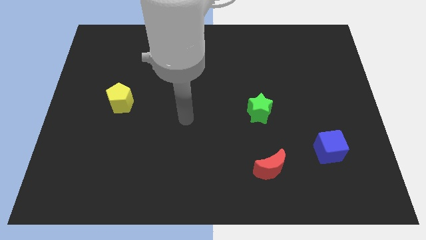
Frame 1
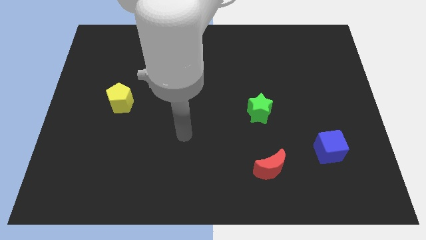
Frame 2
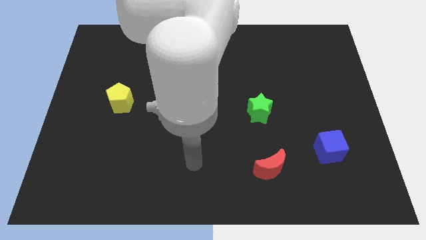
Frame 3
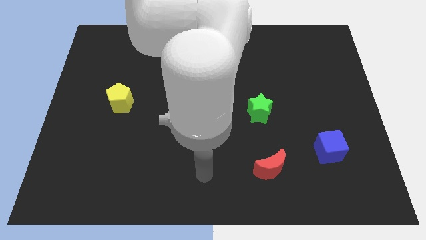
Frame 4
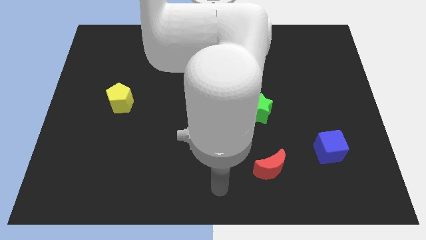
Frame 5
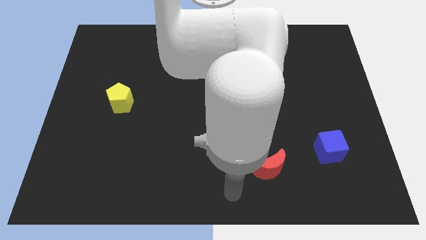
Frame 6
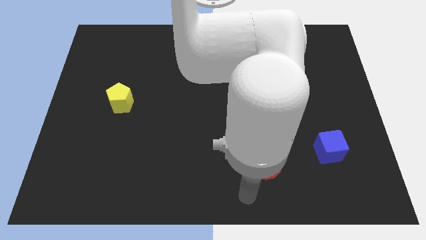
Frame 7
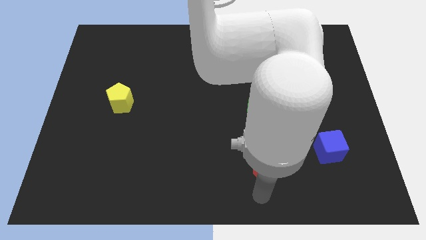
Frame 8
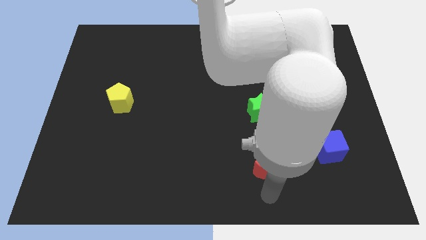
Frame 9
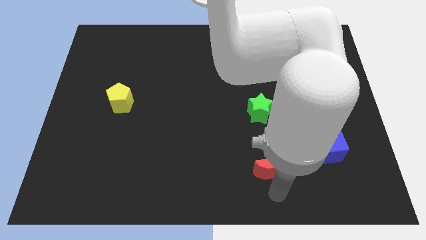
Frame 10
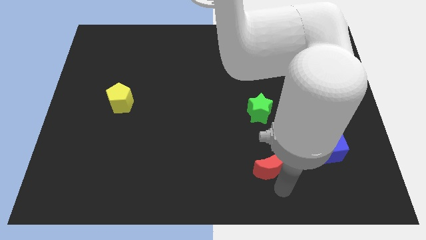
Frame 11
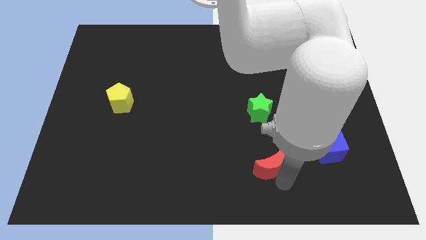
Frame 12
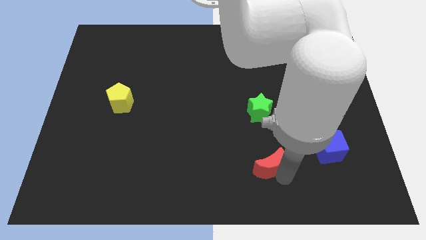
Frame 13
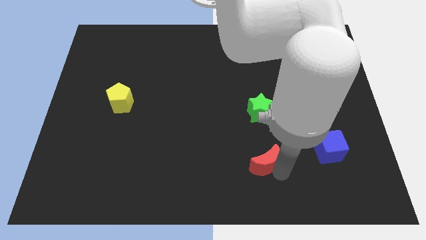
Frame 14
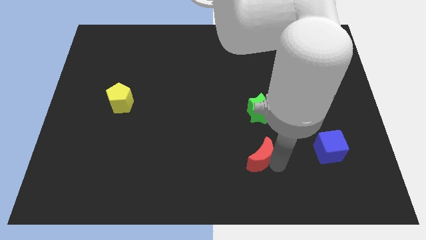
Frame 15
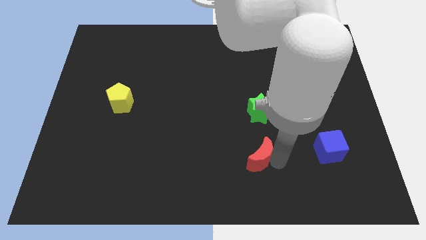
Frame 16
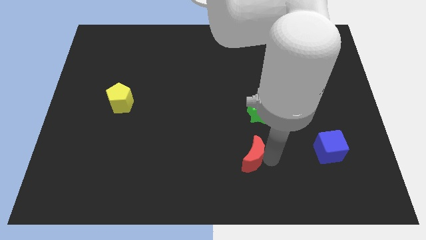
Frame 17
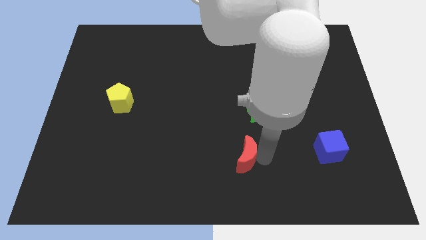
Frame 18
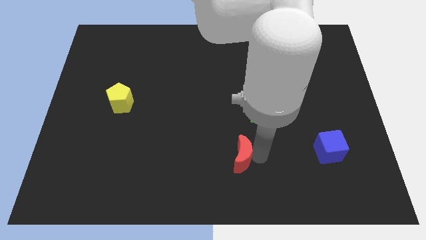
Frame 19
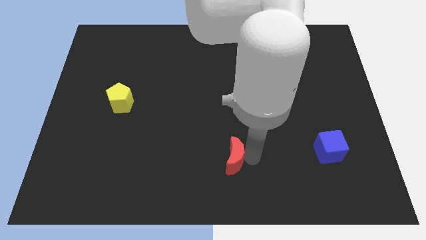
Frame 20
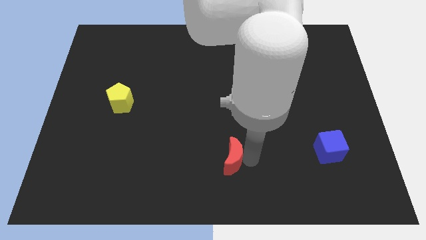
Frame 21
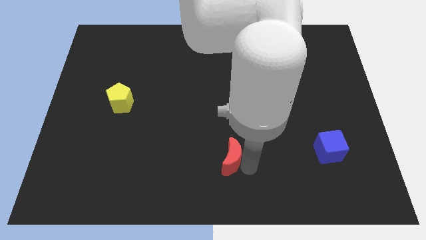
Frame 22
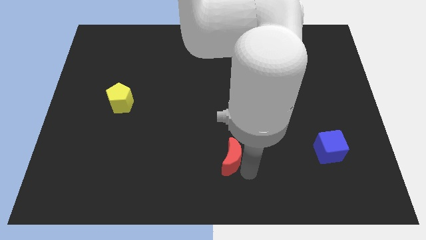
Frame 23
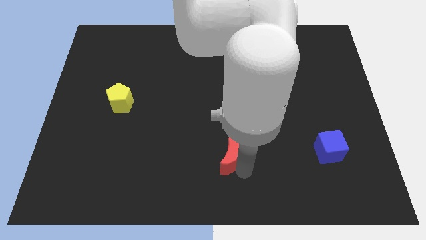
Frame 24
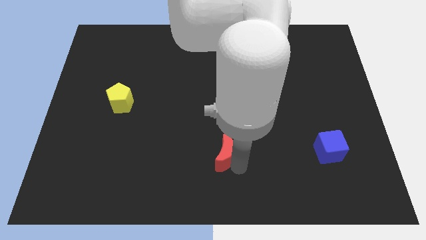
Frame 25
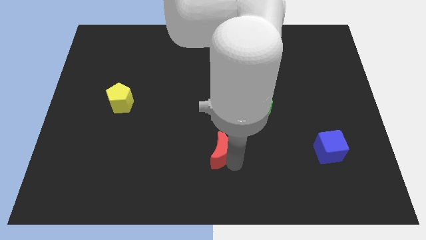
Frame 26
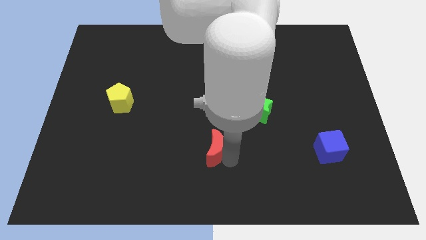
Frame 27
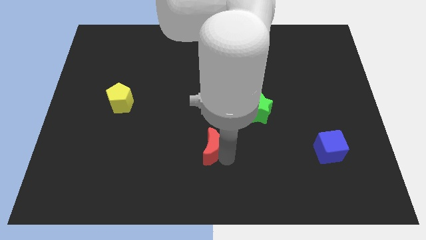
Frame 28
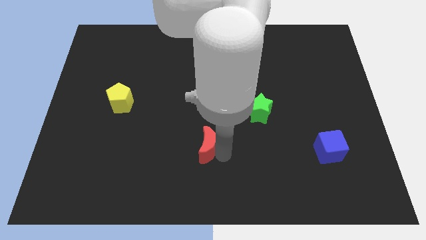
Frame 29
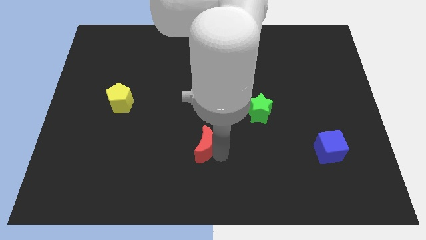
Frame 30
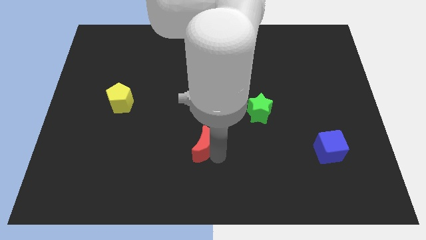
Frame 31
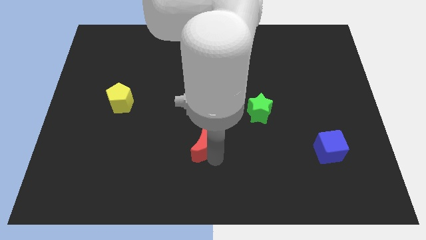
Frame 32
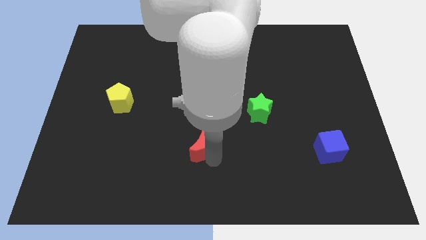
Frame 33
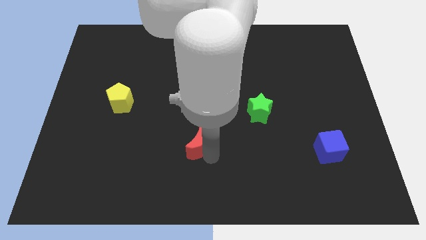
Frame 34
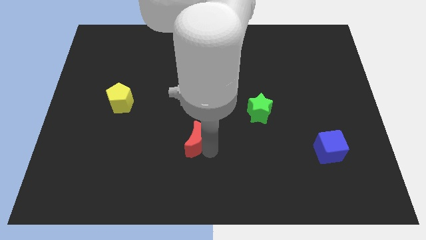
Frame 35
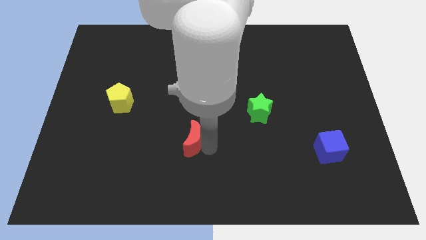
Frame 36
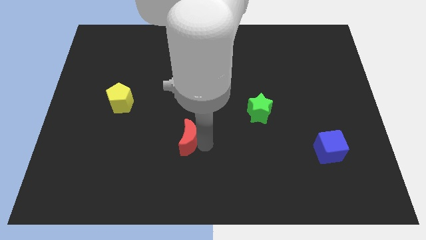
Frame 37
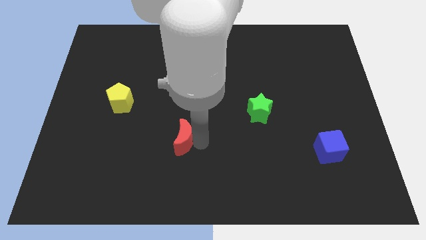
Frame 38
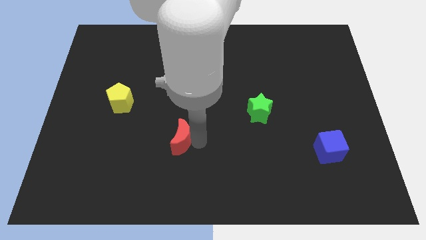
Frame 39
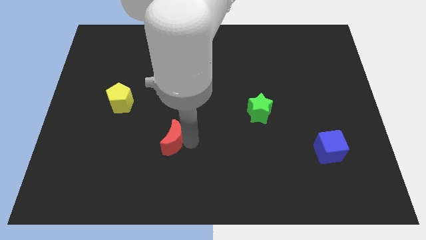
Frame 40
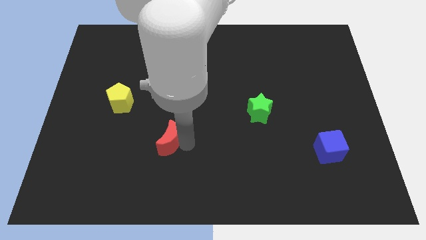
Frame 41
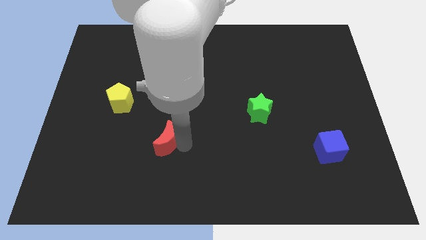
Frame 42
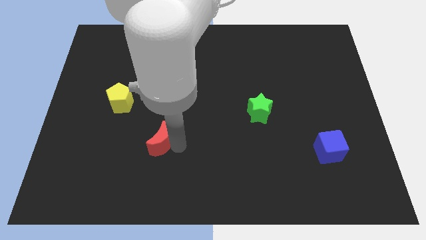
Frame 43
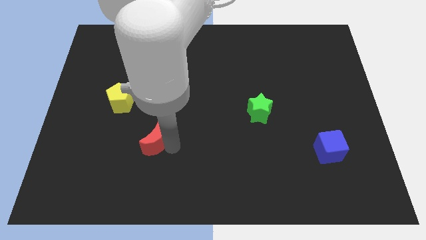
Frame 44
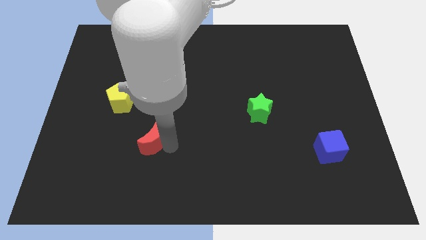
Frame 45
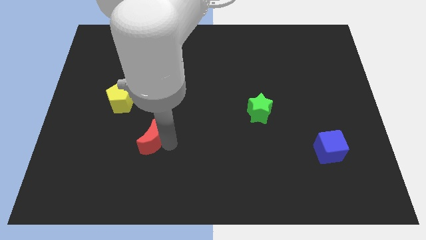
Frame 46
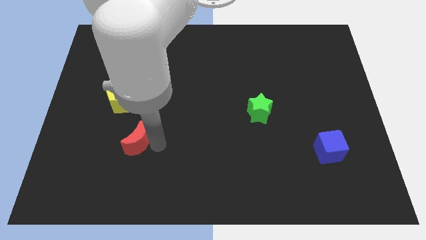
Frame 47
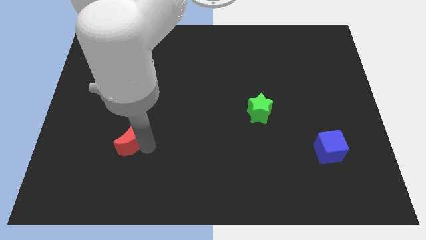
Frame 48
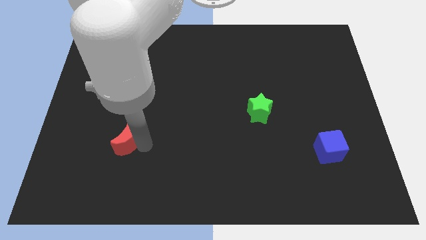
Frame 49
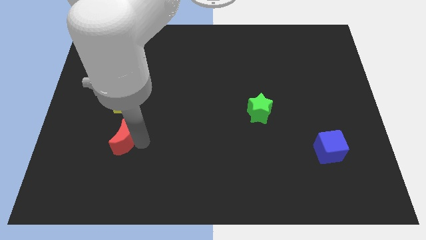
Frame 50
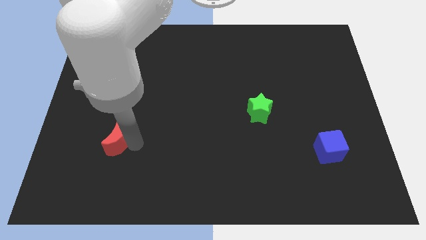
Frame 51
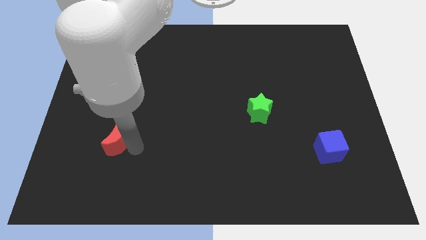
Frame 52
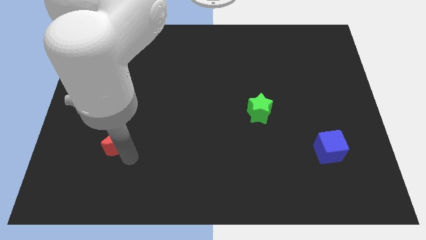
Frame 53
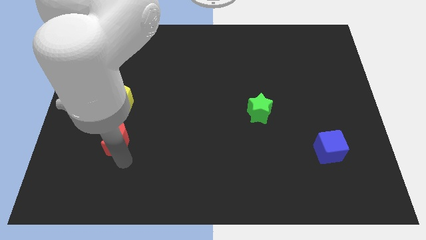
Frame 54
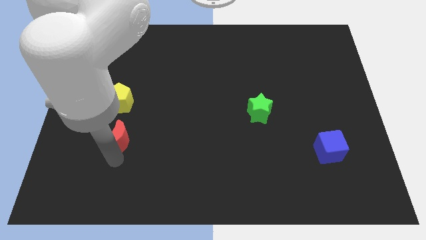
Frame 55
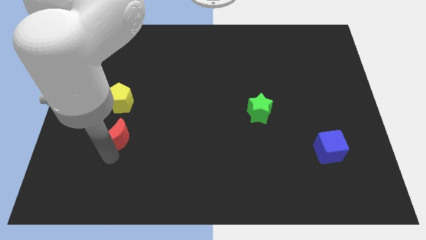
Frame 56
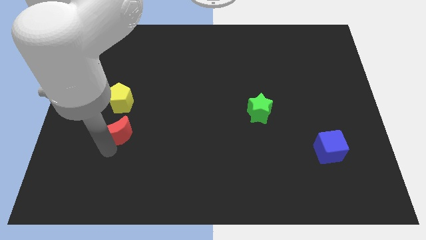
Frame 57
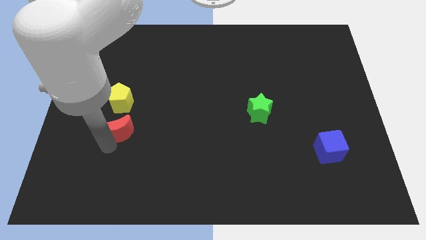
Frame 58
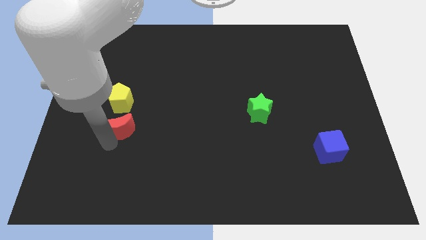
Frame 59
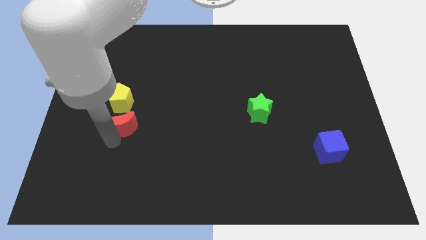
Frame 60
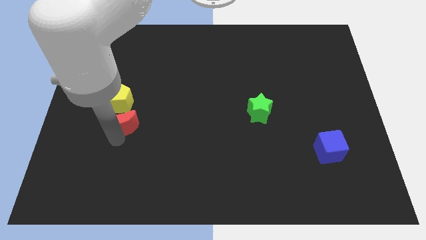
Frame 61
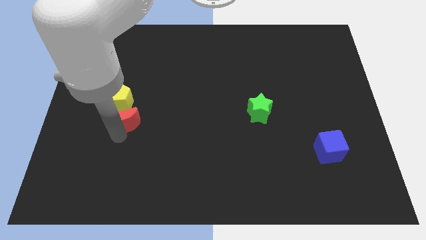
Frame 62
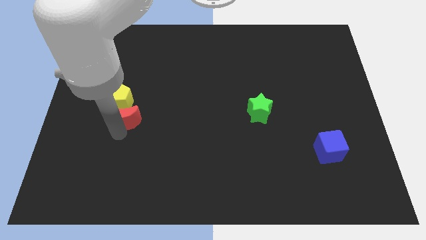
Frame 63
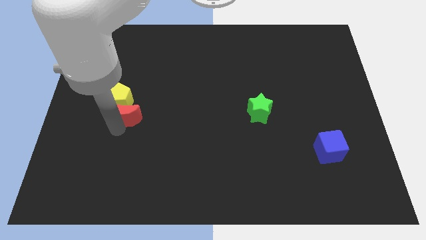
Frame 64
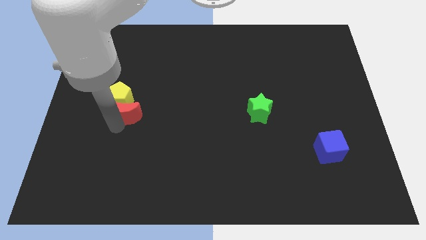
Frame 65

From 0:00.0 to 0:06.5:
move the red block next to the pentagon

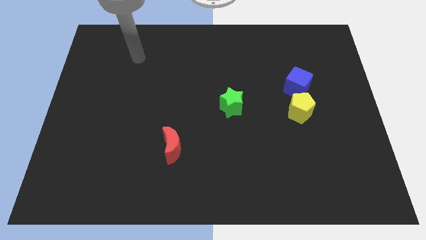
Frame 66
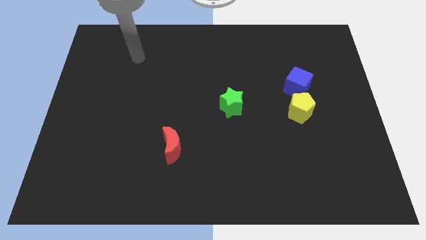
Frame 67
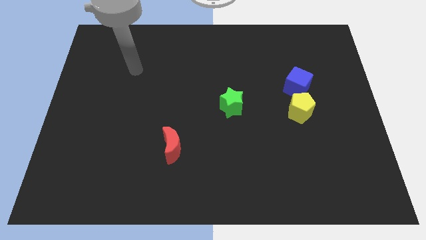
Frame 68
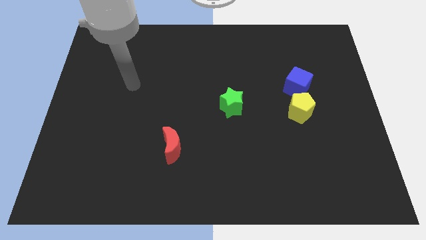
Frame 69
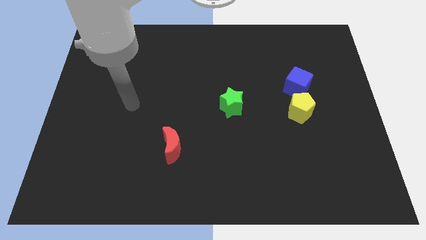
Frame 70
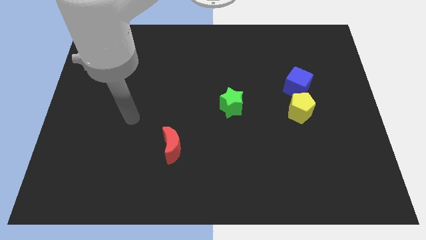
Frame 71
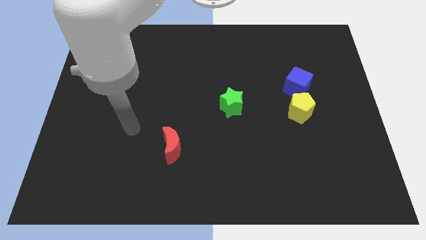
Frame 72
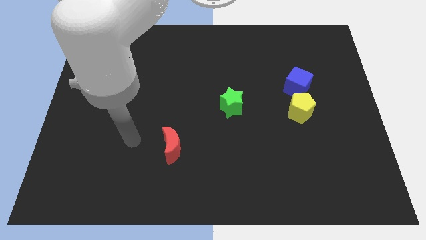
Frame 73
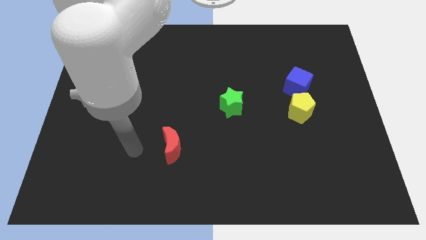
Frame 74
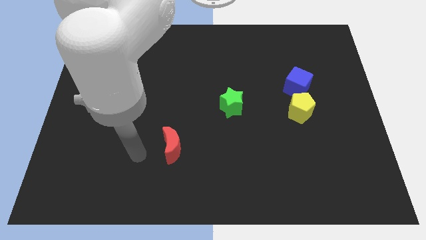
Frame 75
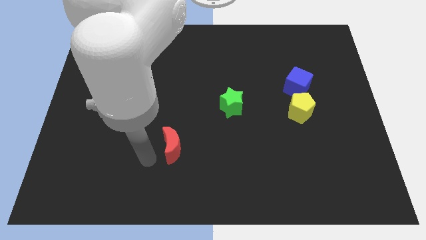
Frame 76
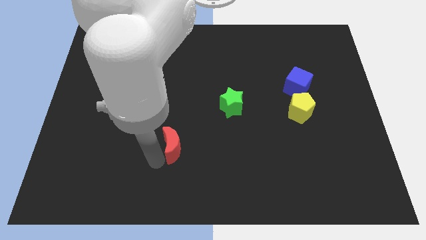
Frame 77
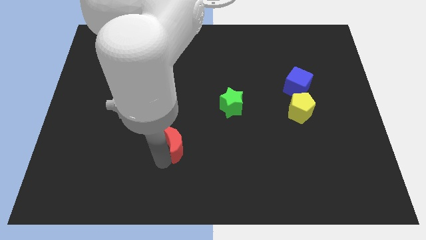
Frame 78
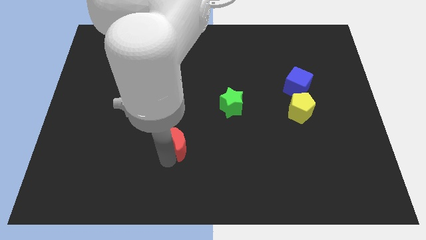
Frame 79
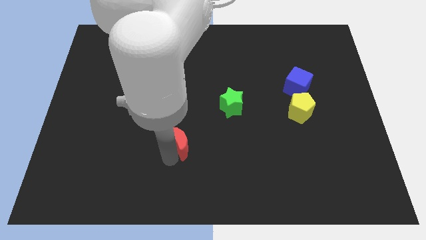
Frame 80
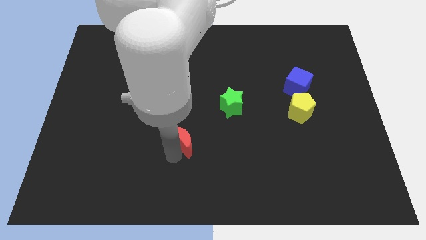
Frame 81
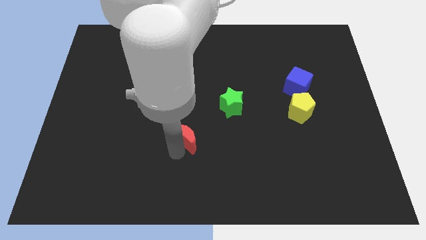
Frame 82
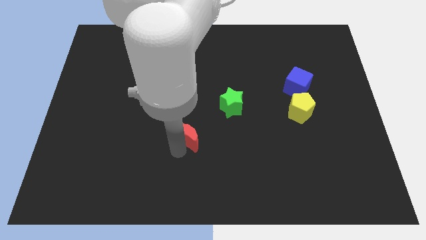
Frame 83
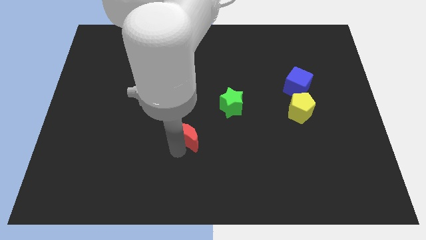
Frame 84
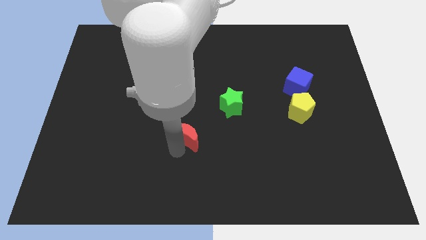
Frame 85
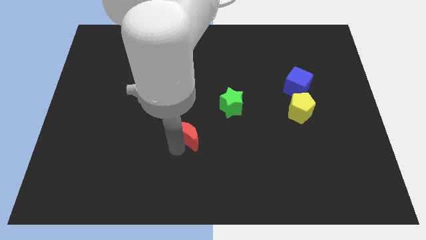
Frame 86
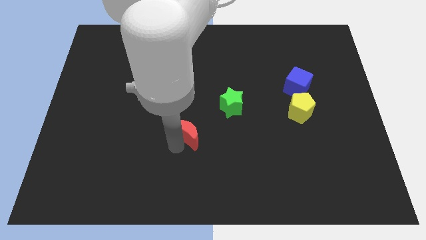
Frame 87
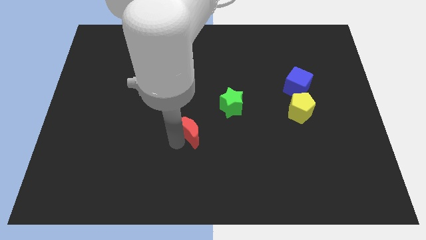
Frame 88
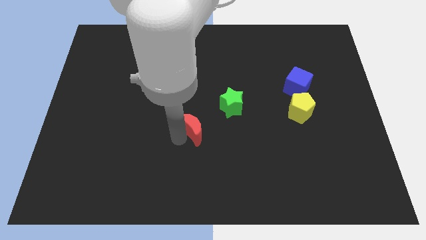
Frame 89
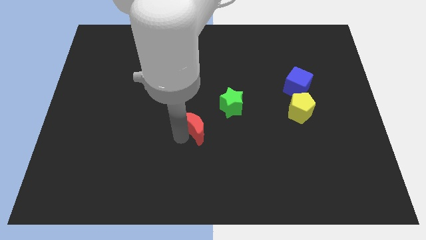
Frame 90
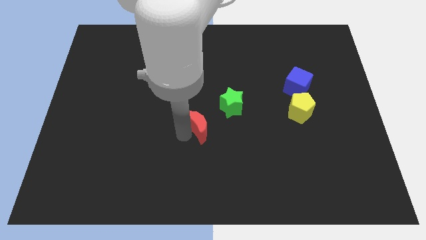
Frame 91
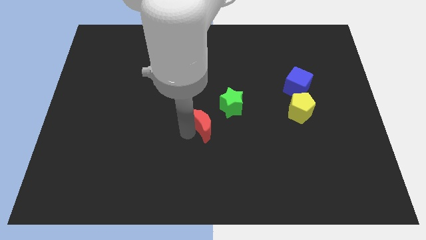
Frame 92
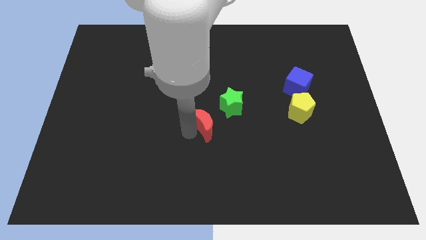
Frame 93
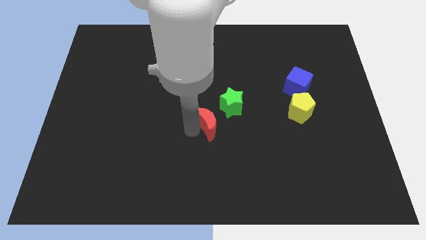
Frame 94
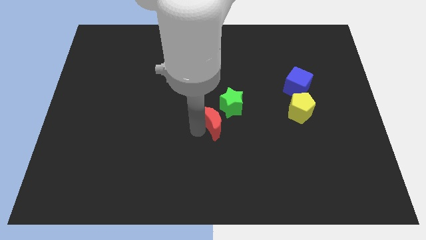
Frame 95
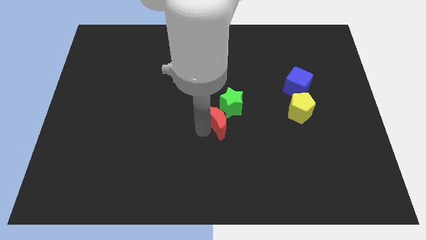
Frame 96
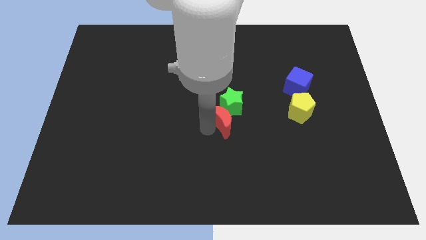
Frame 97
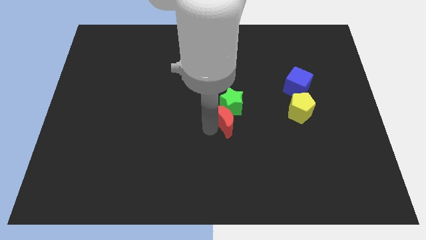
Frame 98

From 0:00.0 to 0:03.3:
put the red block next to the green star
